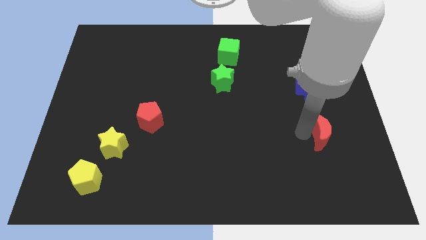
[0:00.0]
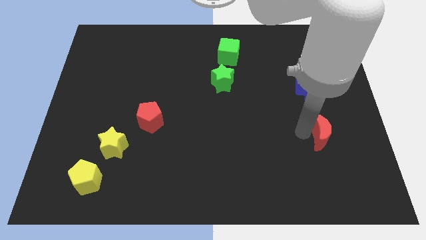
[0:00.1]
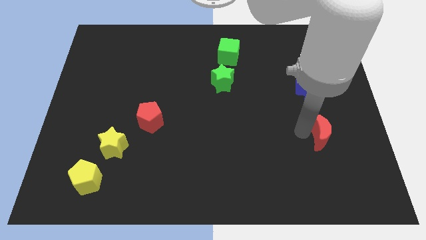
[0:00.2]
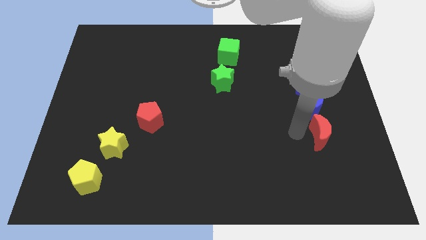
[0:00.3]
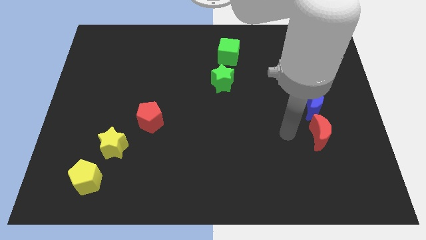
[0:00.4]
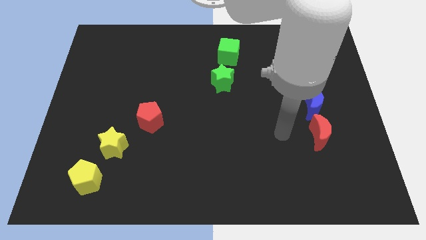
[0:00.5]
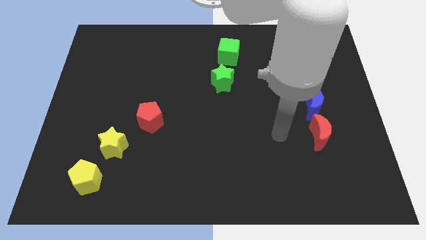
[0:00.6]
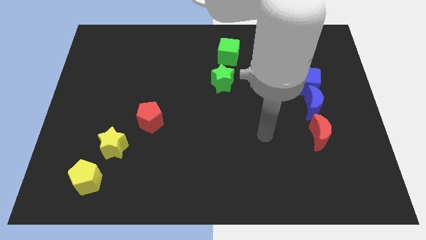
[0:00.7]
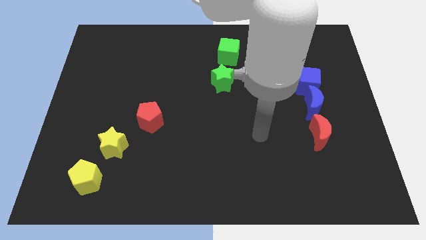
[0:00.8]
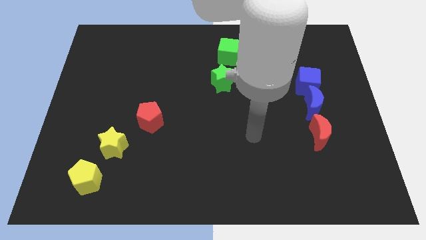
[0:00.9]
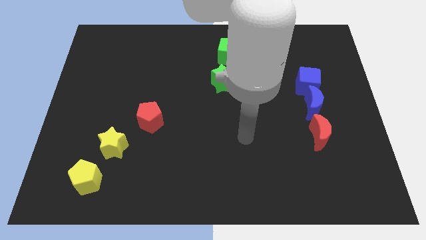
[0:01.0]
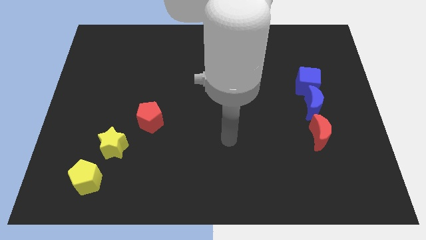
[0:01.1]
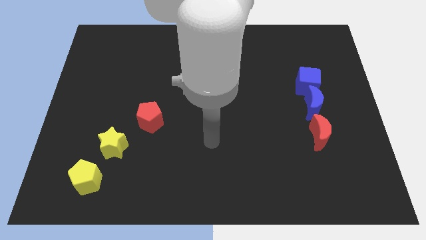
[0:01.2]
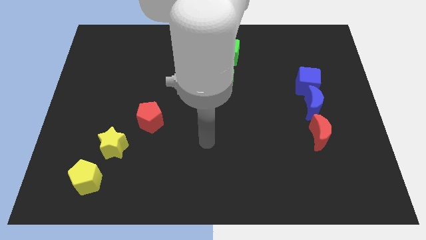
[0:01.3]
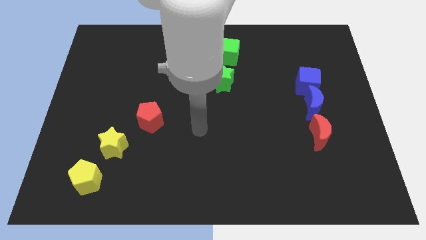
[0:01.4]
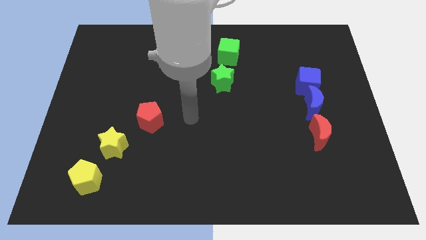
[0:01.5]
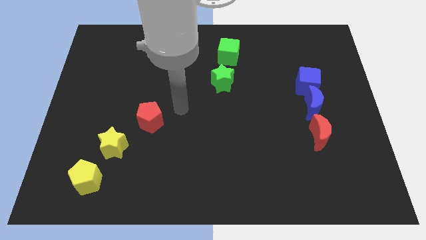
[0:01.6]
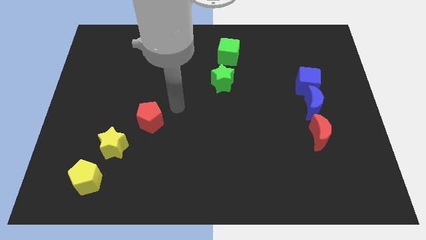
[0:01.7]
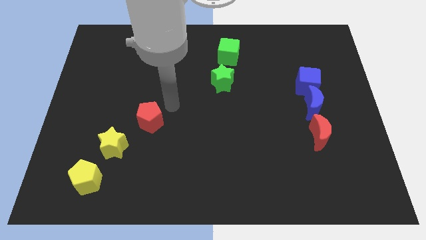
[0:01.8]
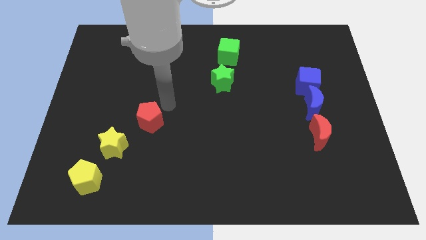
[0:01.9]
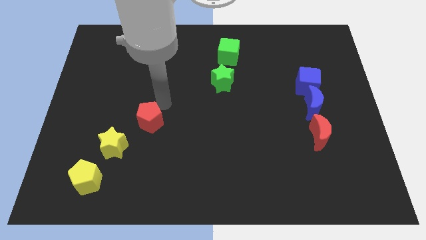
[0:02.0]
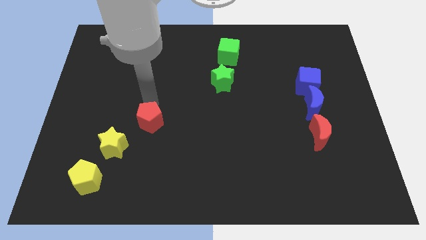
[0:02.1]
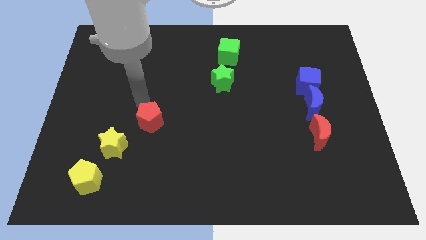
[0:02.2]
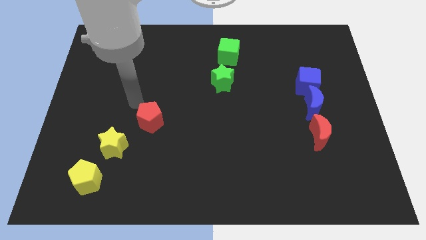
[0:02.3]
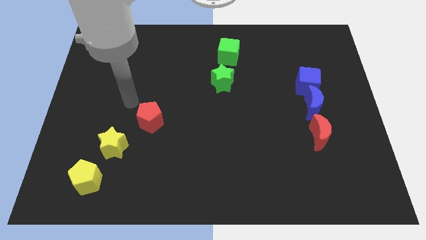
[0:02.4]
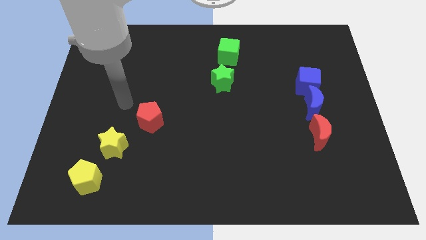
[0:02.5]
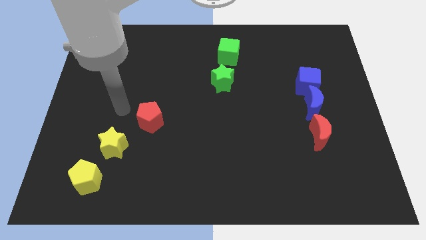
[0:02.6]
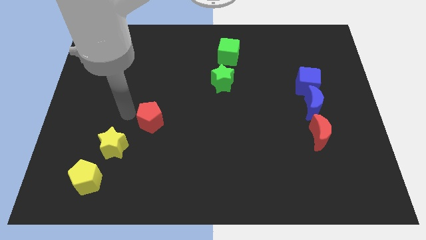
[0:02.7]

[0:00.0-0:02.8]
move arm towards red pentagon

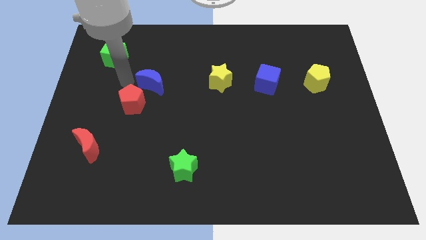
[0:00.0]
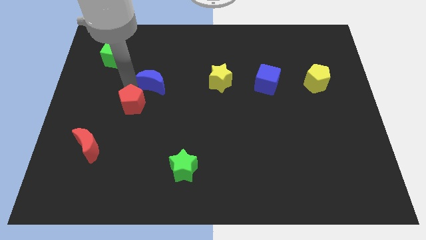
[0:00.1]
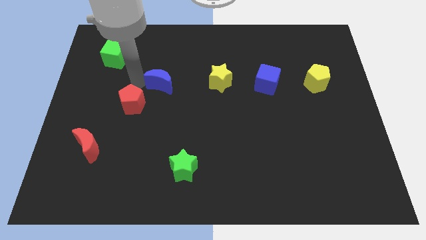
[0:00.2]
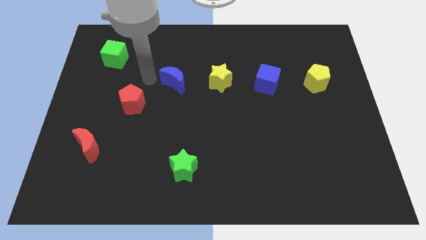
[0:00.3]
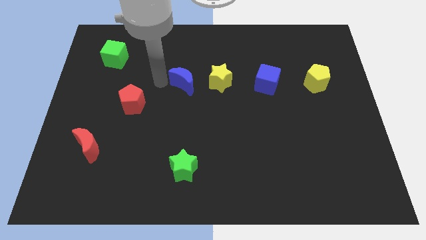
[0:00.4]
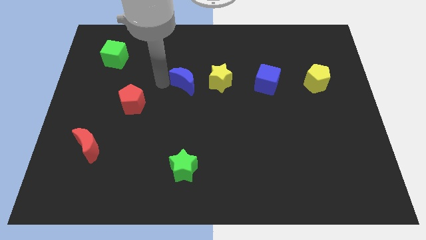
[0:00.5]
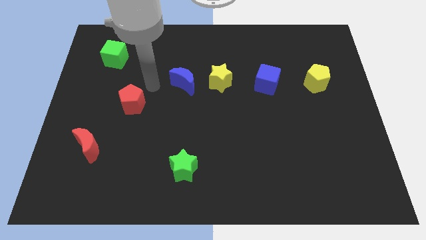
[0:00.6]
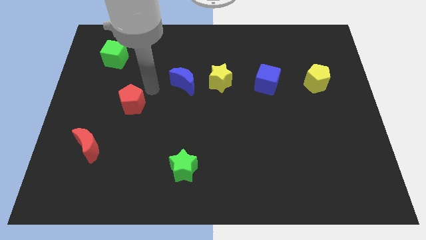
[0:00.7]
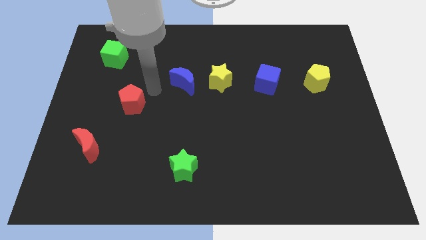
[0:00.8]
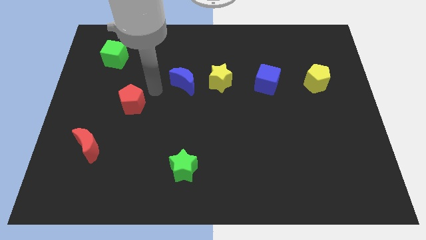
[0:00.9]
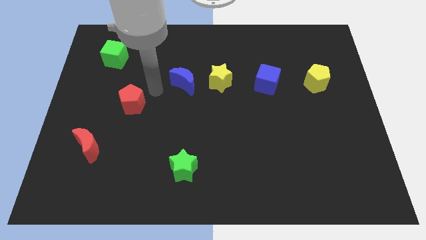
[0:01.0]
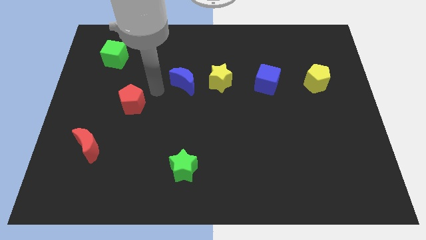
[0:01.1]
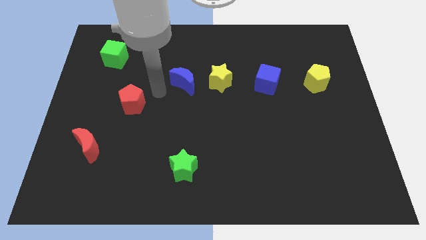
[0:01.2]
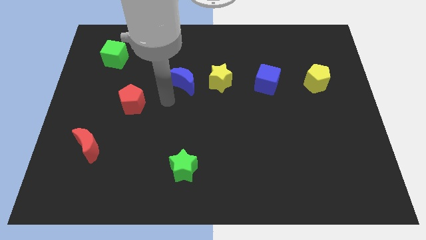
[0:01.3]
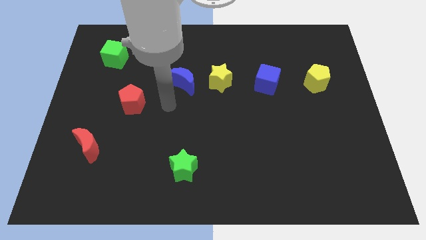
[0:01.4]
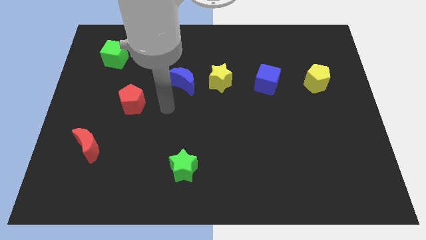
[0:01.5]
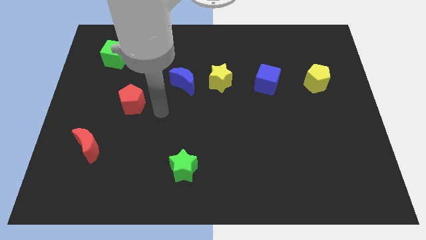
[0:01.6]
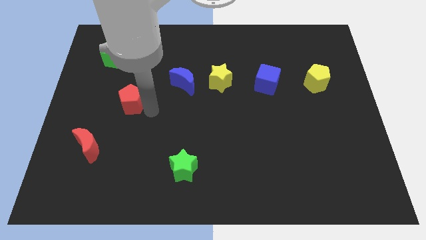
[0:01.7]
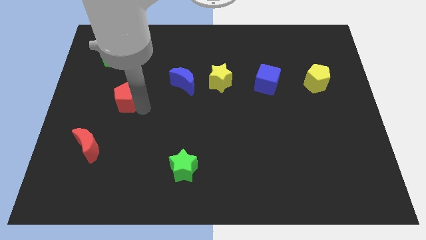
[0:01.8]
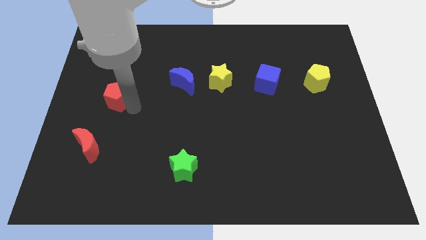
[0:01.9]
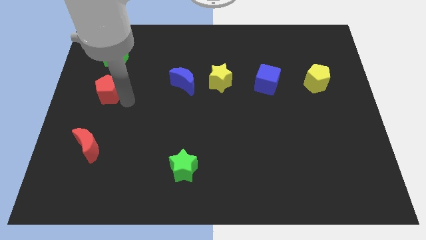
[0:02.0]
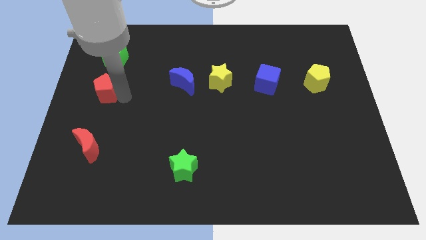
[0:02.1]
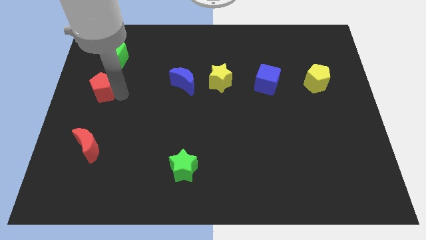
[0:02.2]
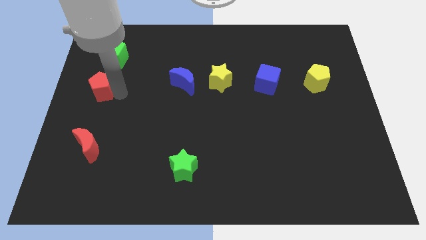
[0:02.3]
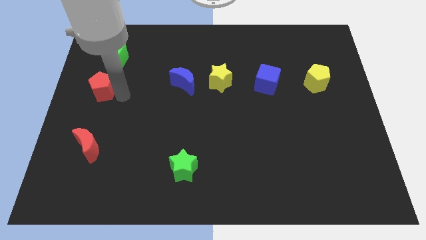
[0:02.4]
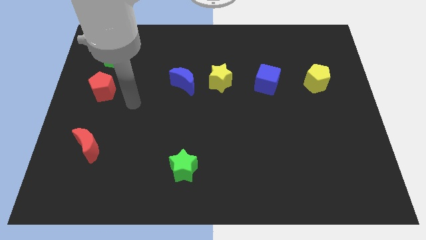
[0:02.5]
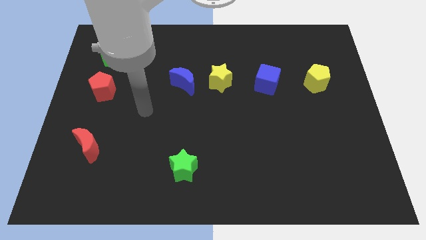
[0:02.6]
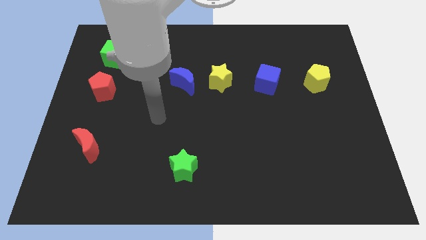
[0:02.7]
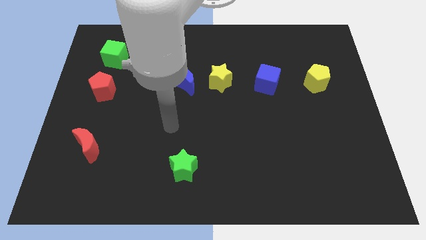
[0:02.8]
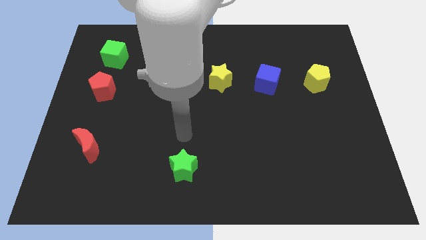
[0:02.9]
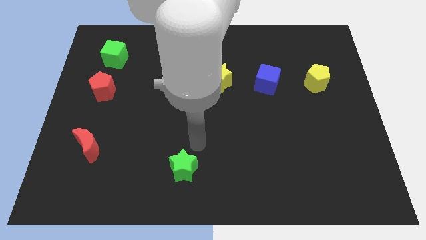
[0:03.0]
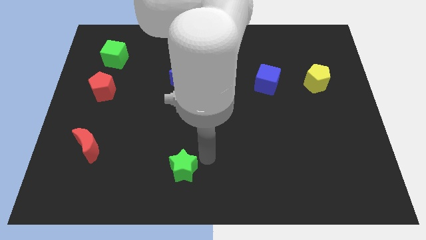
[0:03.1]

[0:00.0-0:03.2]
place your arm above green star

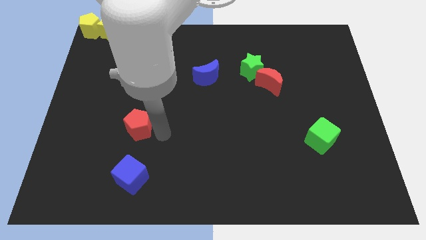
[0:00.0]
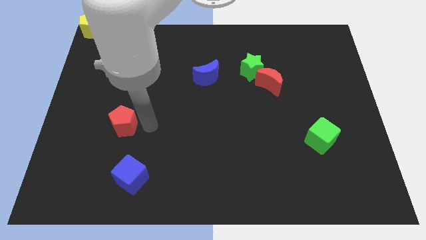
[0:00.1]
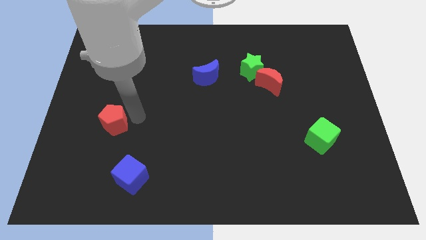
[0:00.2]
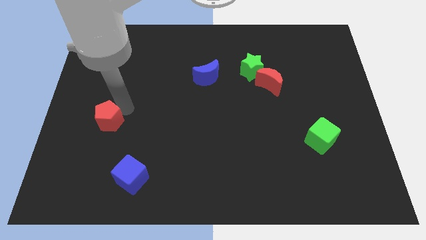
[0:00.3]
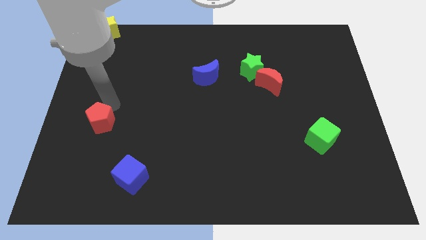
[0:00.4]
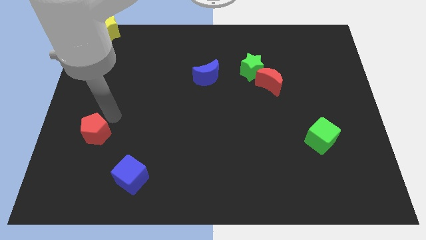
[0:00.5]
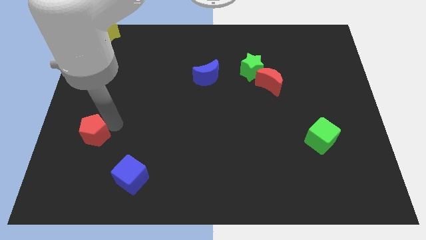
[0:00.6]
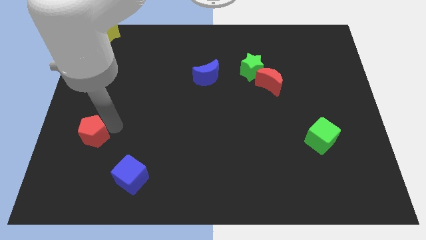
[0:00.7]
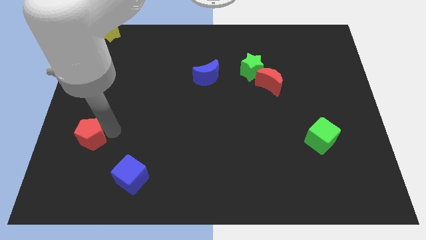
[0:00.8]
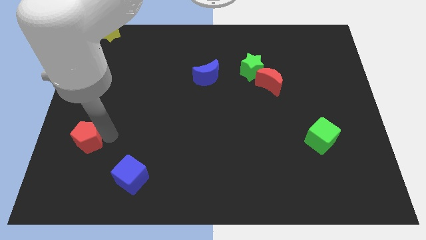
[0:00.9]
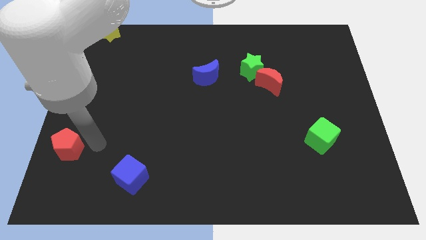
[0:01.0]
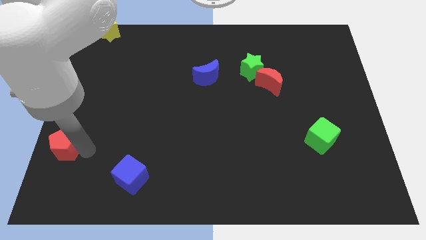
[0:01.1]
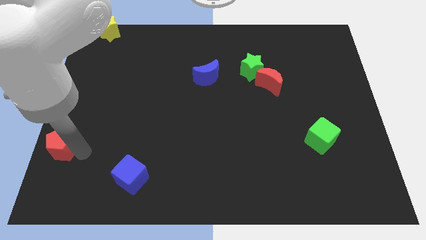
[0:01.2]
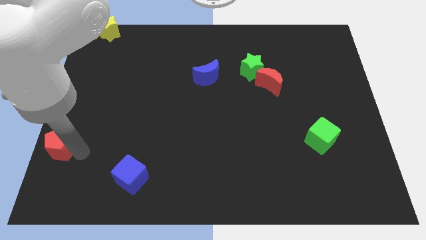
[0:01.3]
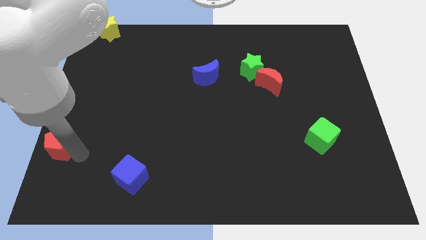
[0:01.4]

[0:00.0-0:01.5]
move red pentagon to left center of the board

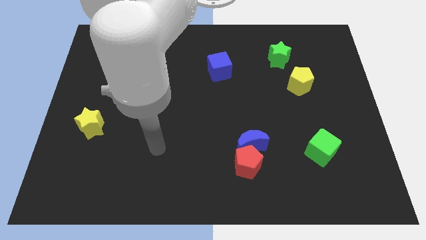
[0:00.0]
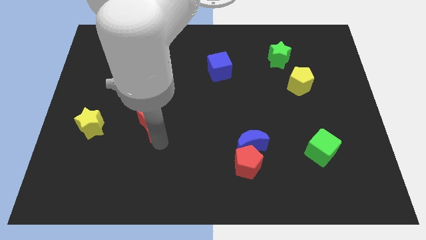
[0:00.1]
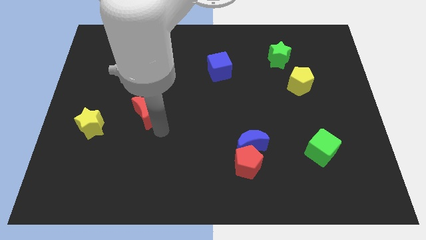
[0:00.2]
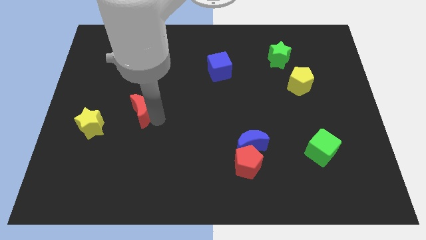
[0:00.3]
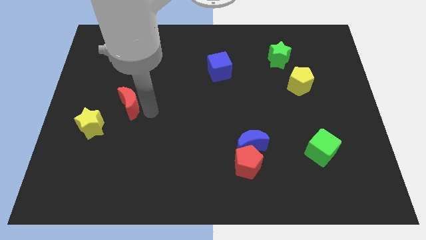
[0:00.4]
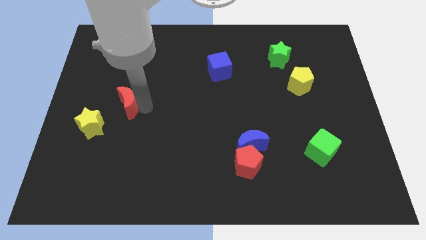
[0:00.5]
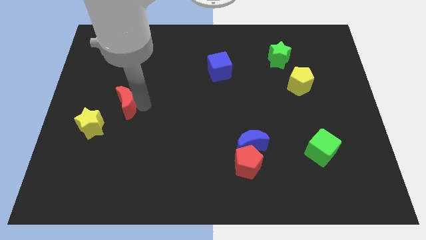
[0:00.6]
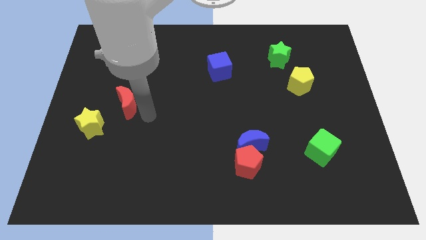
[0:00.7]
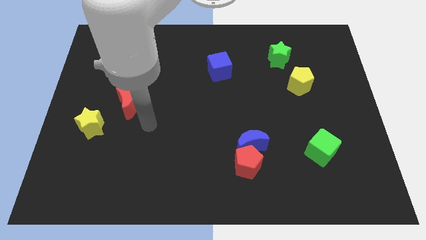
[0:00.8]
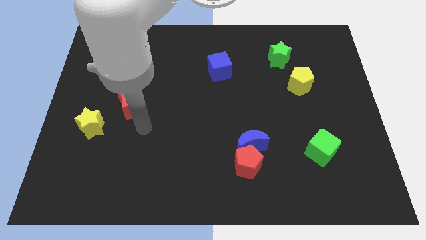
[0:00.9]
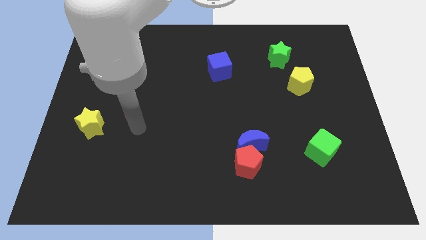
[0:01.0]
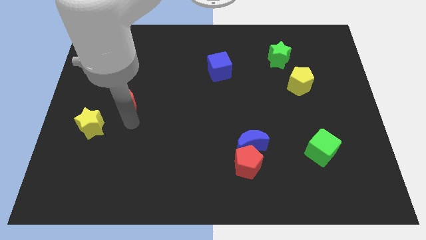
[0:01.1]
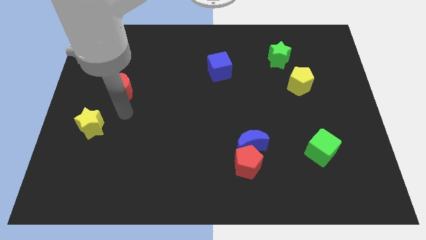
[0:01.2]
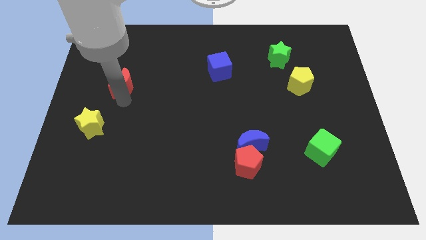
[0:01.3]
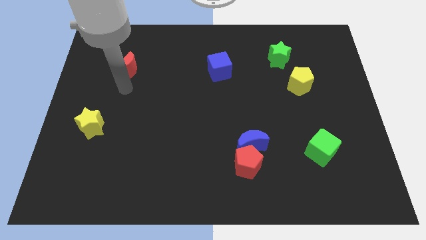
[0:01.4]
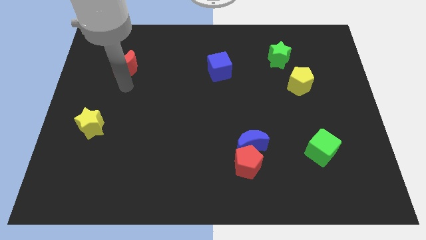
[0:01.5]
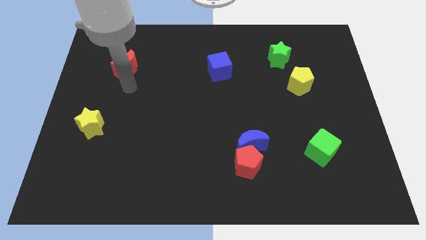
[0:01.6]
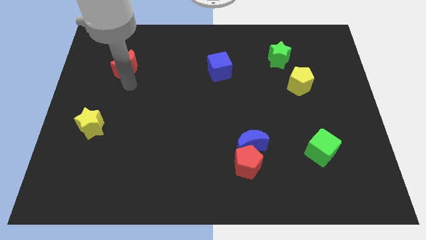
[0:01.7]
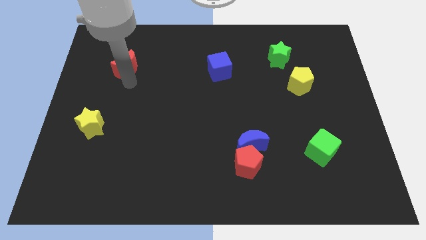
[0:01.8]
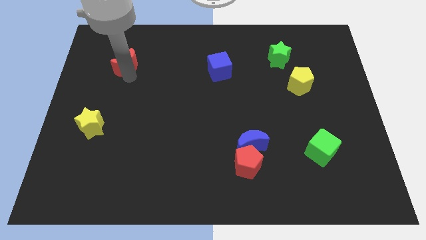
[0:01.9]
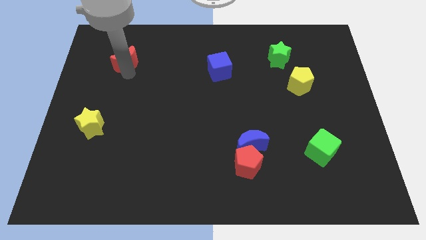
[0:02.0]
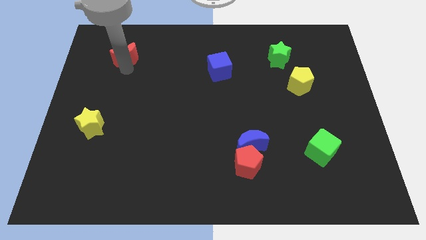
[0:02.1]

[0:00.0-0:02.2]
tap your hand on the bottom side of red moon
